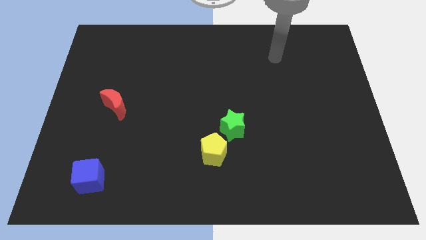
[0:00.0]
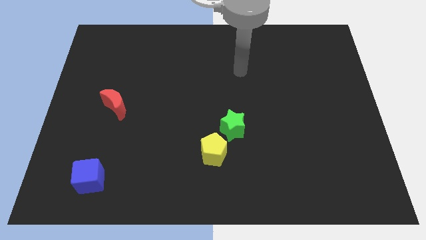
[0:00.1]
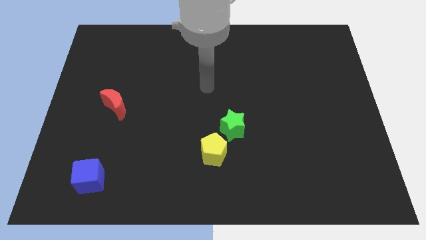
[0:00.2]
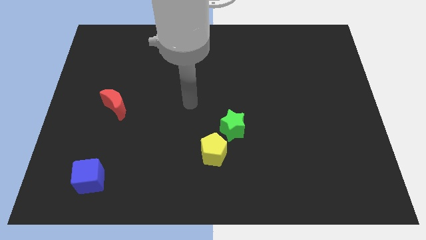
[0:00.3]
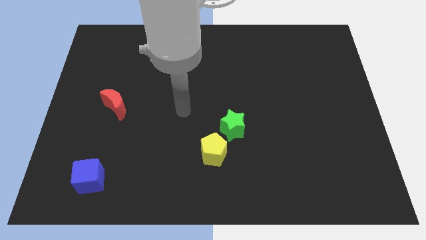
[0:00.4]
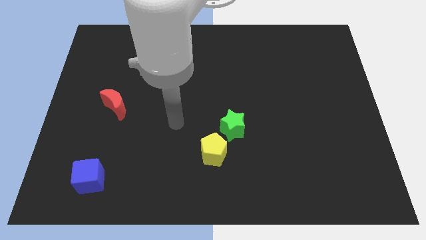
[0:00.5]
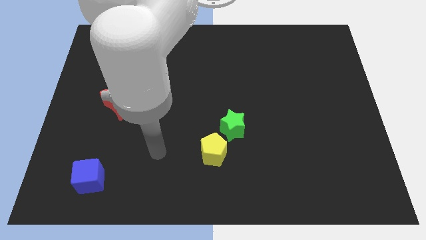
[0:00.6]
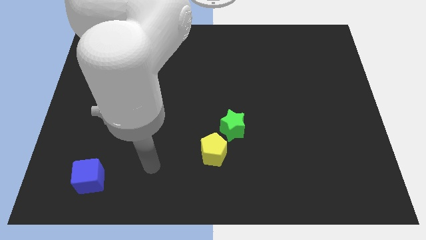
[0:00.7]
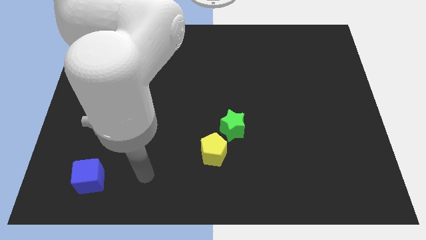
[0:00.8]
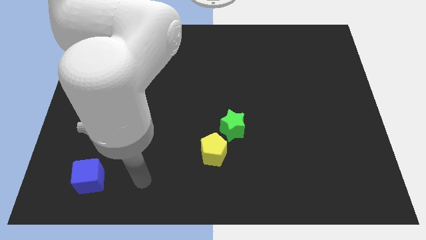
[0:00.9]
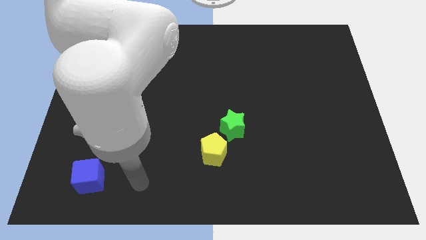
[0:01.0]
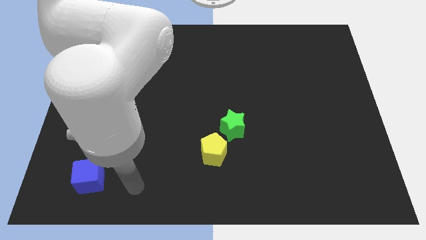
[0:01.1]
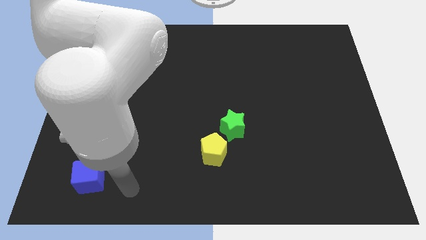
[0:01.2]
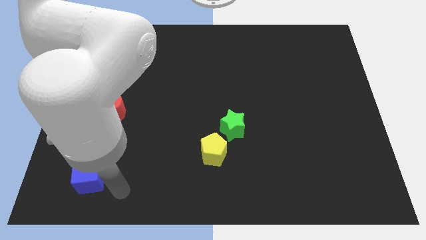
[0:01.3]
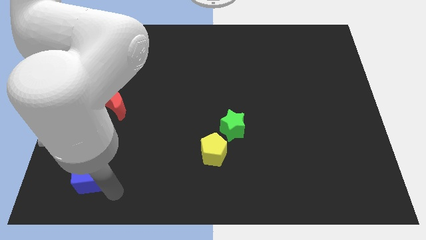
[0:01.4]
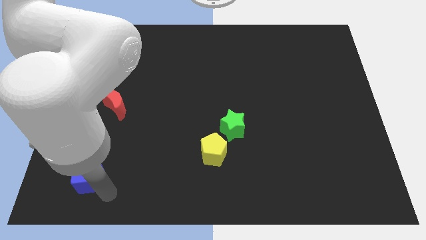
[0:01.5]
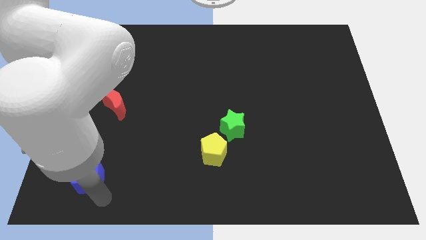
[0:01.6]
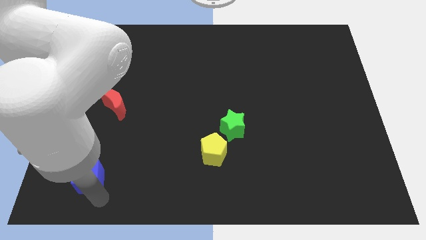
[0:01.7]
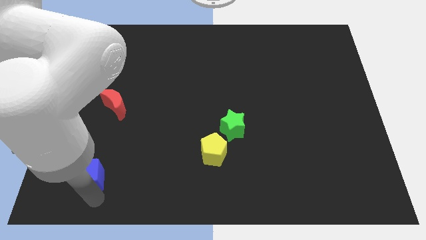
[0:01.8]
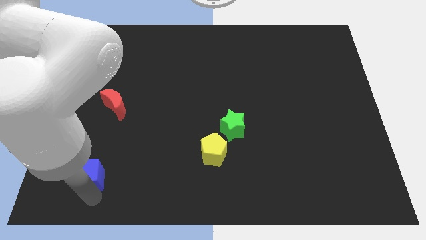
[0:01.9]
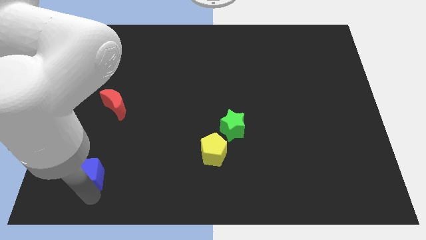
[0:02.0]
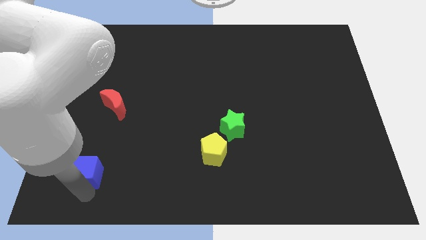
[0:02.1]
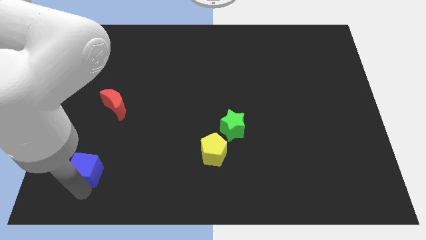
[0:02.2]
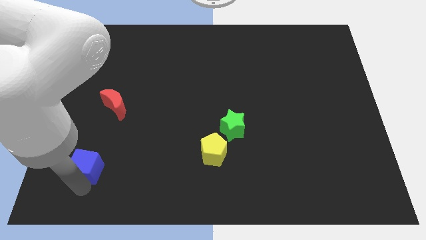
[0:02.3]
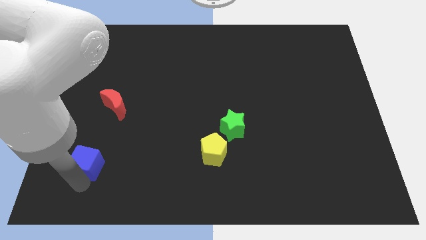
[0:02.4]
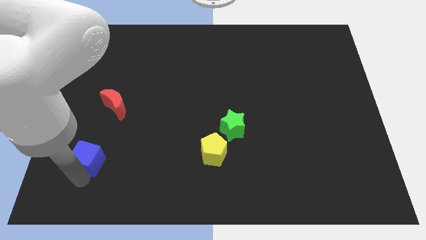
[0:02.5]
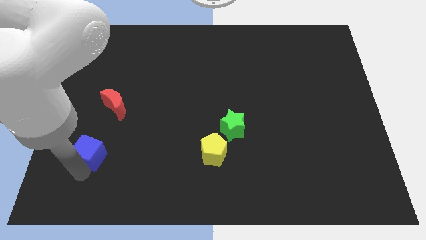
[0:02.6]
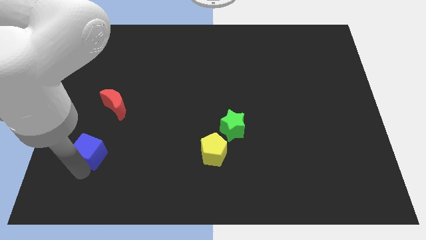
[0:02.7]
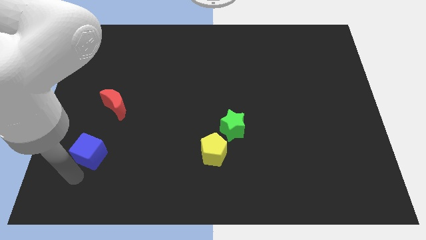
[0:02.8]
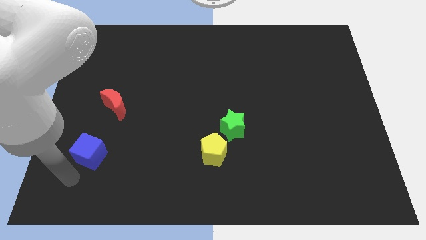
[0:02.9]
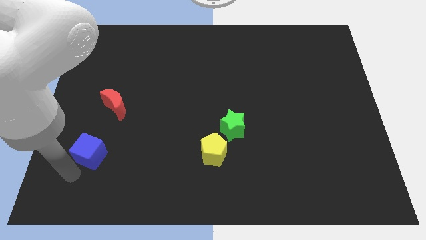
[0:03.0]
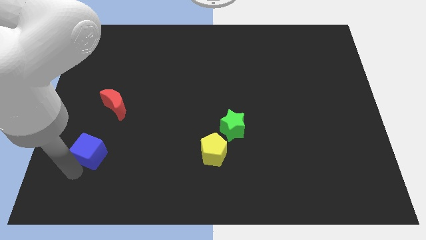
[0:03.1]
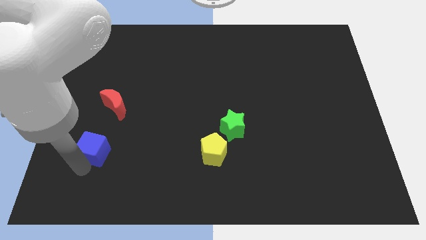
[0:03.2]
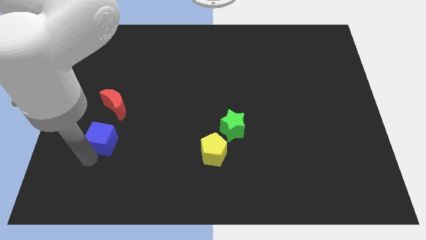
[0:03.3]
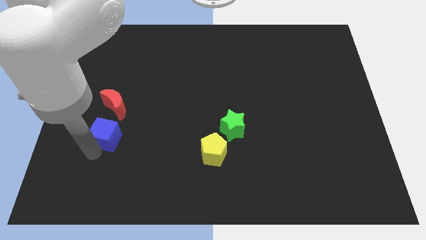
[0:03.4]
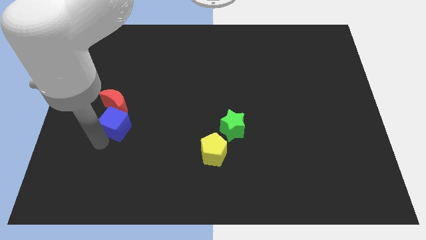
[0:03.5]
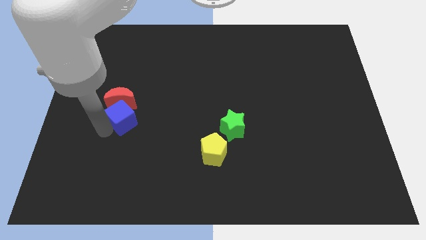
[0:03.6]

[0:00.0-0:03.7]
put the blue cube close to the red block

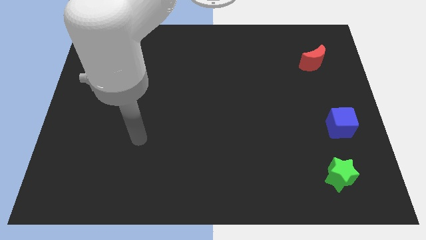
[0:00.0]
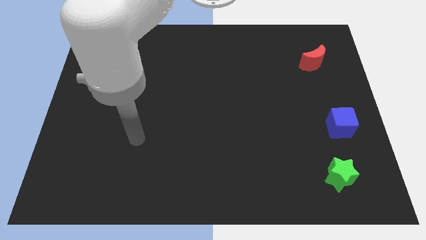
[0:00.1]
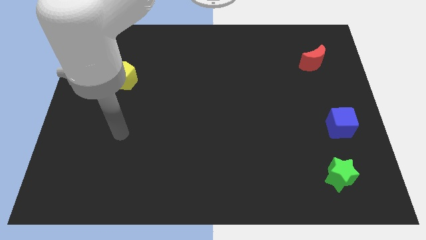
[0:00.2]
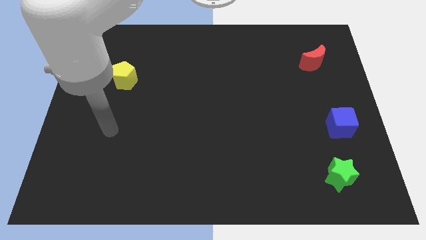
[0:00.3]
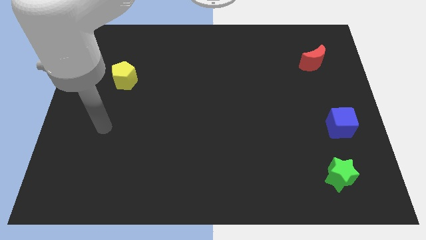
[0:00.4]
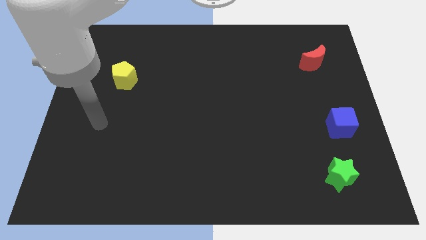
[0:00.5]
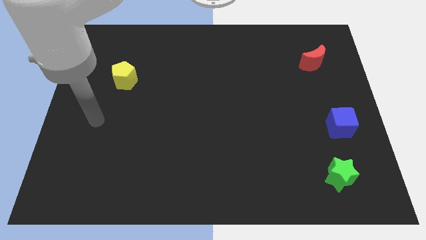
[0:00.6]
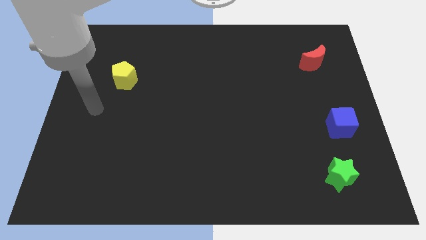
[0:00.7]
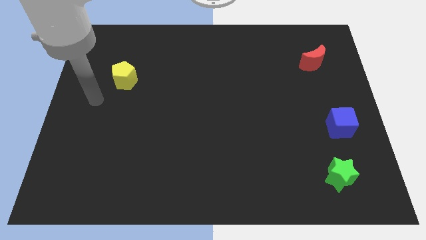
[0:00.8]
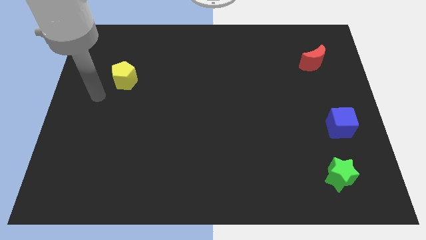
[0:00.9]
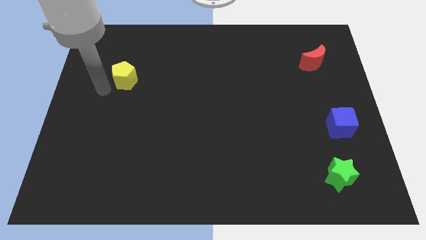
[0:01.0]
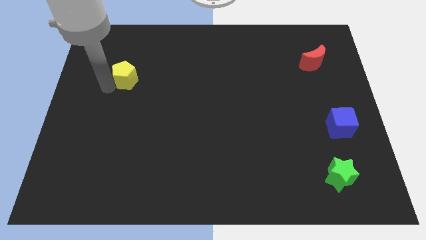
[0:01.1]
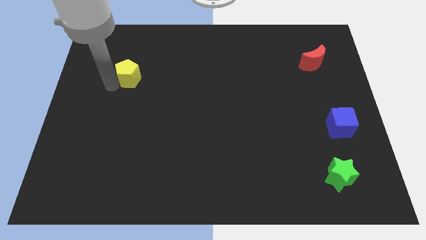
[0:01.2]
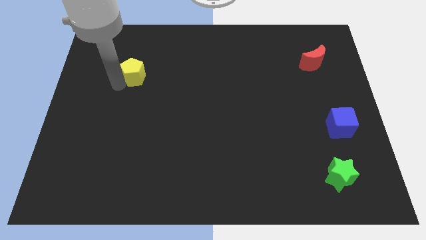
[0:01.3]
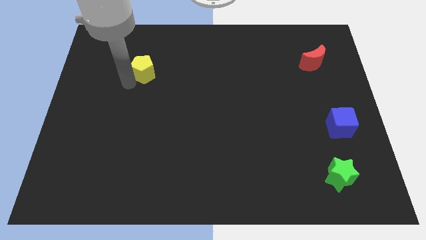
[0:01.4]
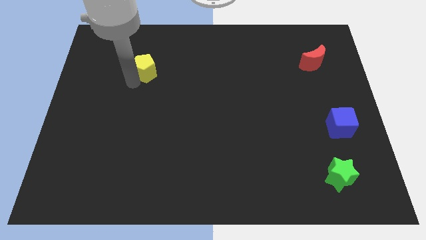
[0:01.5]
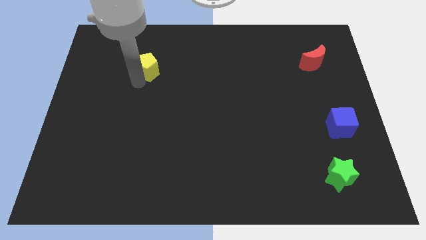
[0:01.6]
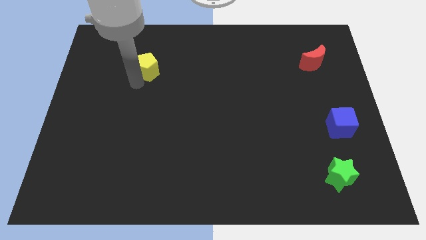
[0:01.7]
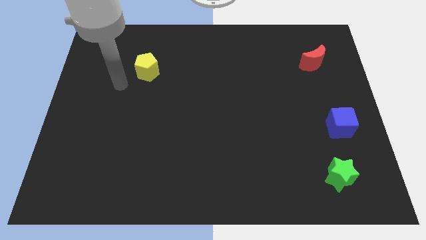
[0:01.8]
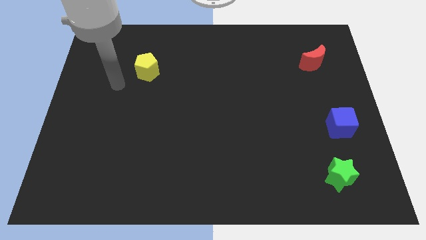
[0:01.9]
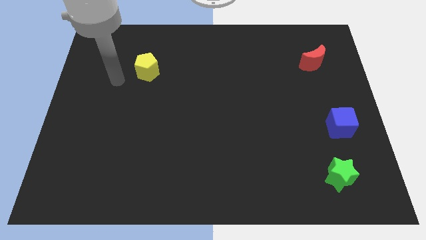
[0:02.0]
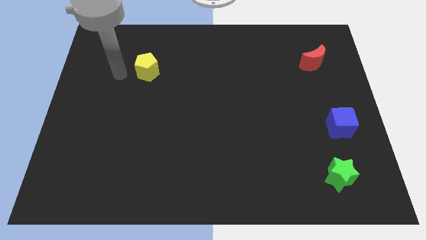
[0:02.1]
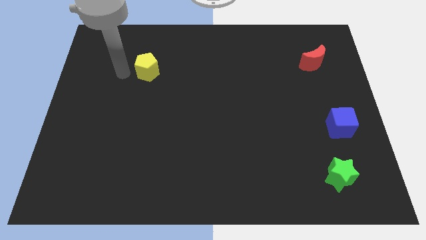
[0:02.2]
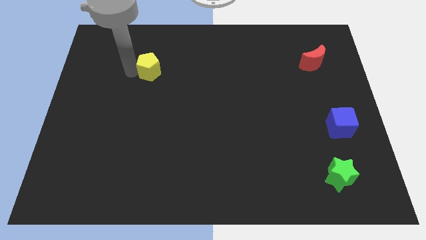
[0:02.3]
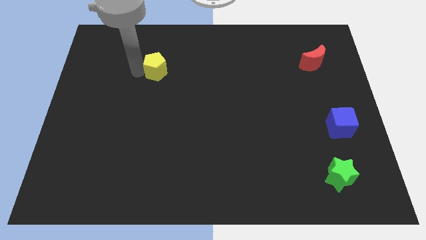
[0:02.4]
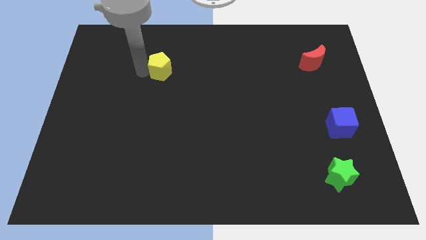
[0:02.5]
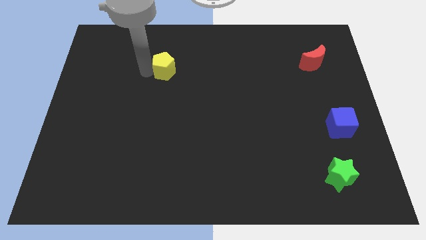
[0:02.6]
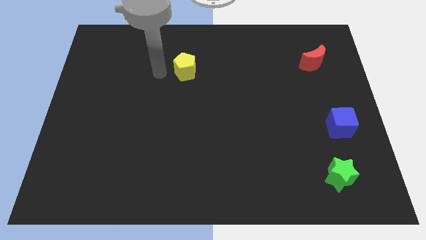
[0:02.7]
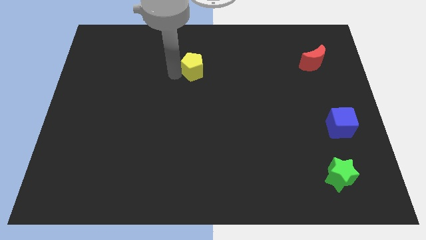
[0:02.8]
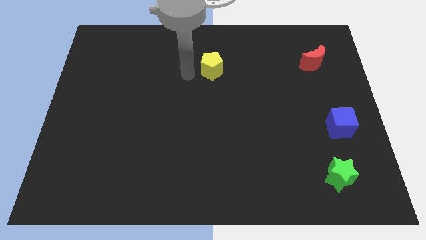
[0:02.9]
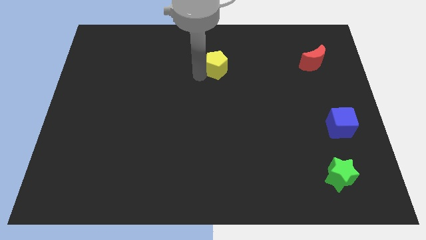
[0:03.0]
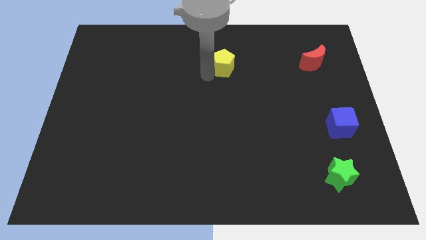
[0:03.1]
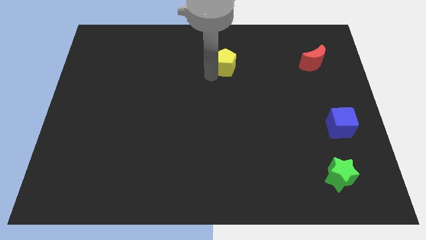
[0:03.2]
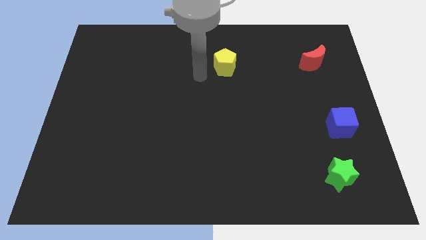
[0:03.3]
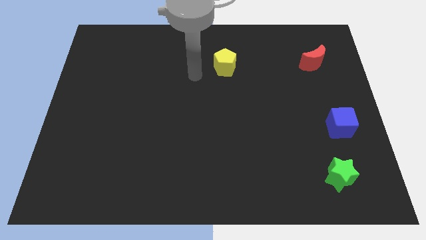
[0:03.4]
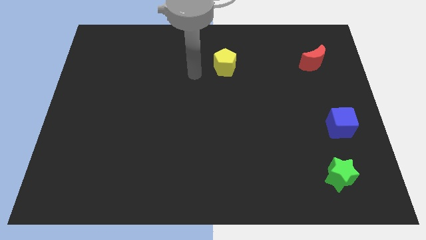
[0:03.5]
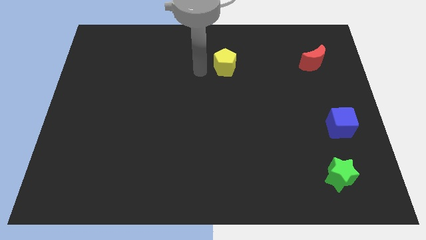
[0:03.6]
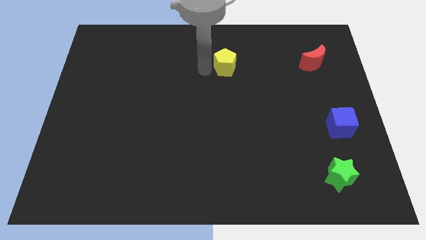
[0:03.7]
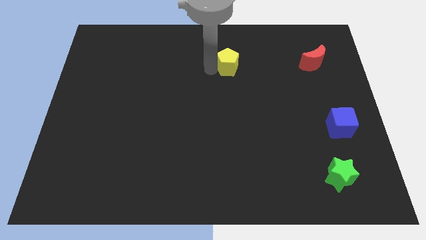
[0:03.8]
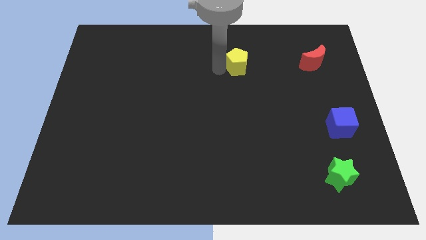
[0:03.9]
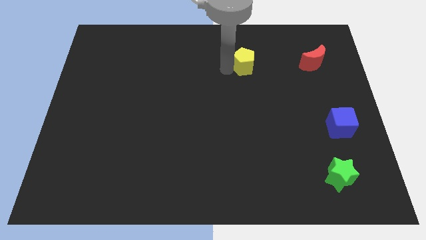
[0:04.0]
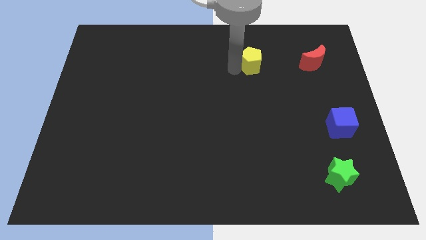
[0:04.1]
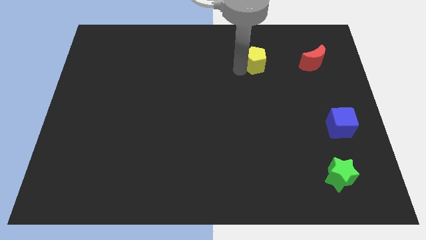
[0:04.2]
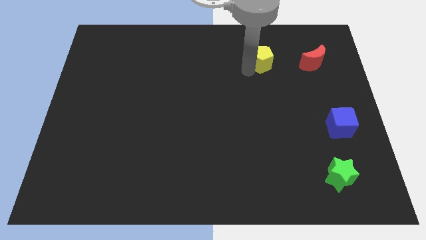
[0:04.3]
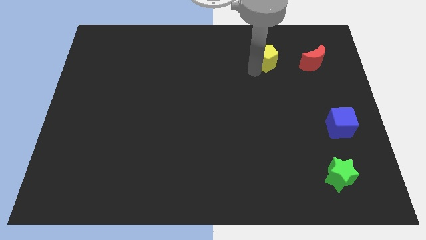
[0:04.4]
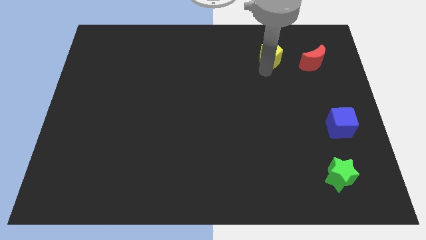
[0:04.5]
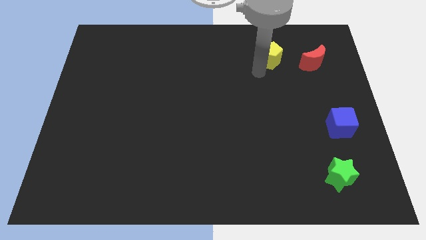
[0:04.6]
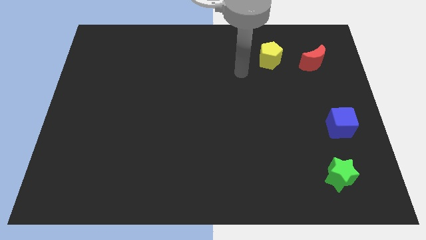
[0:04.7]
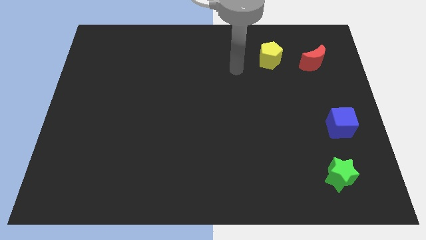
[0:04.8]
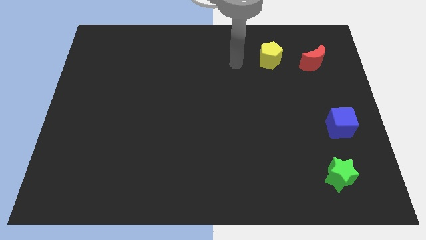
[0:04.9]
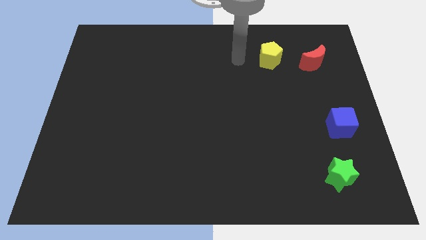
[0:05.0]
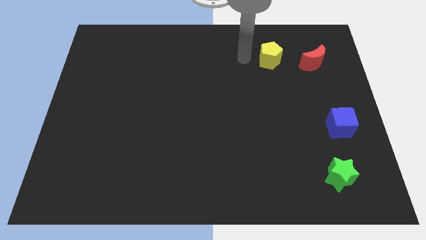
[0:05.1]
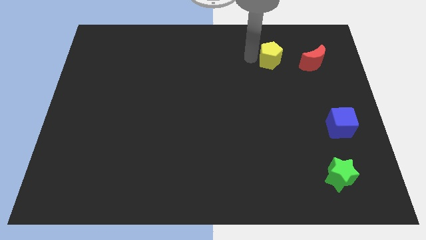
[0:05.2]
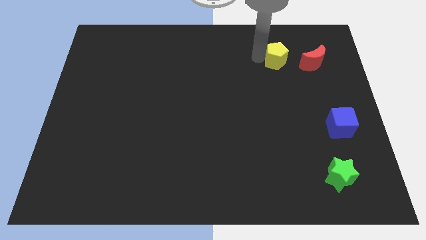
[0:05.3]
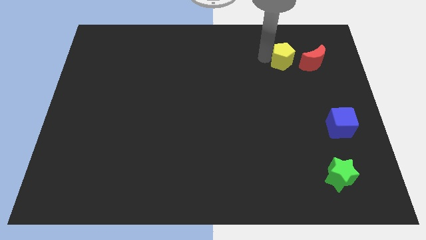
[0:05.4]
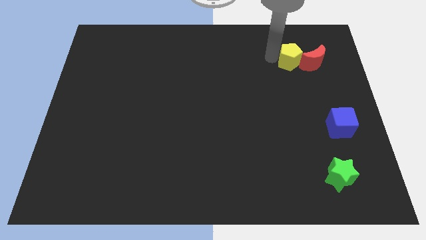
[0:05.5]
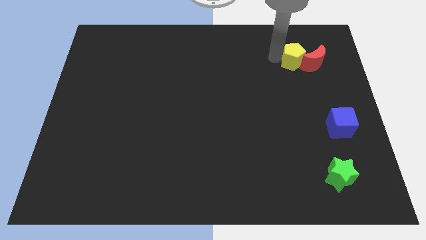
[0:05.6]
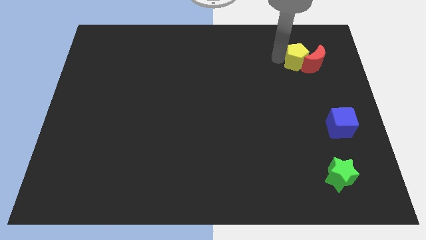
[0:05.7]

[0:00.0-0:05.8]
push the pentagon to the red moon
